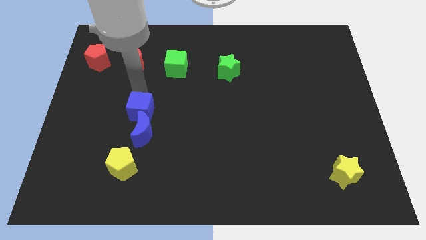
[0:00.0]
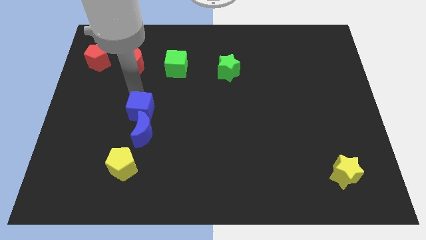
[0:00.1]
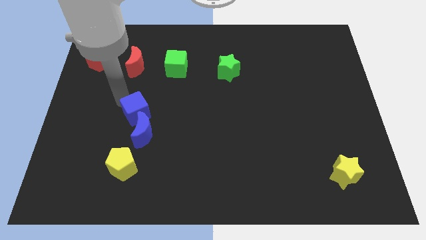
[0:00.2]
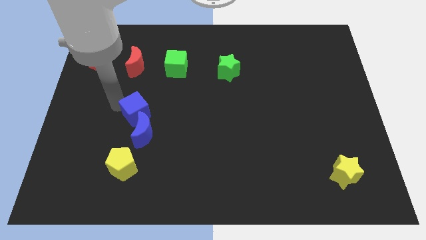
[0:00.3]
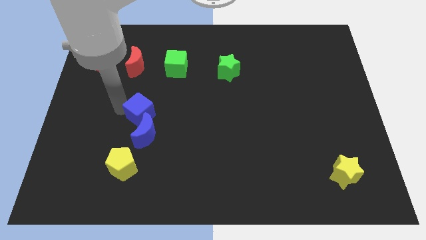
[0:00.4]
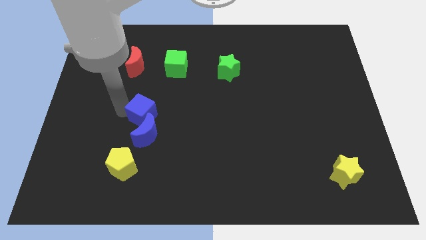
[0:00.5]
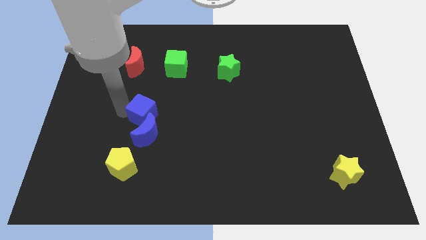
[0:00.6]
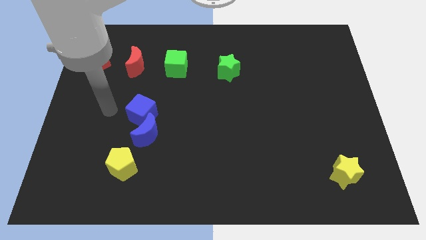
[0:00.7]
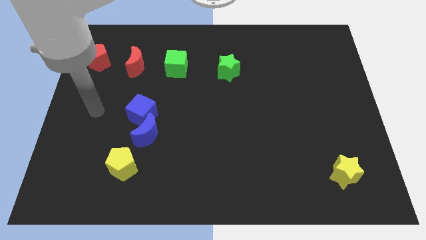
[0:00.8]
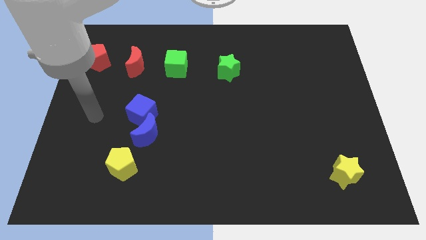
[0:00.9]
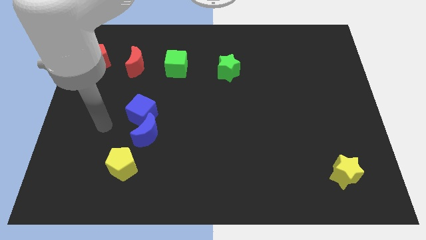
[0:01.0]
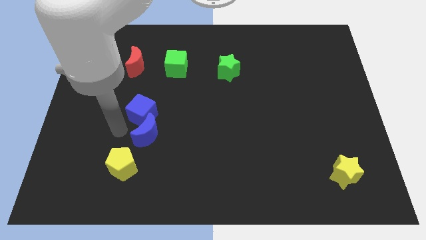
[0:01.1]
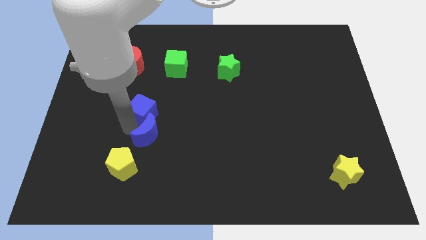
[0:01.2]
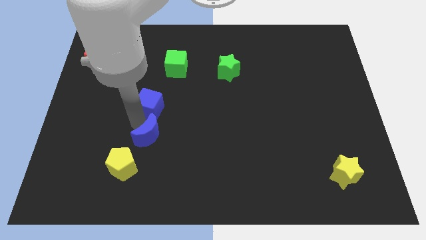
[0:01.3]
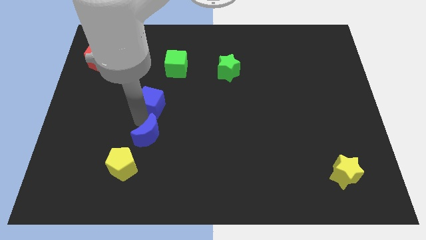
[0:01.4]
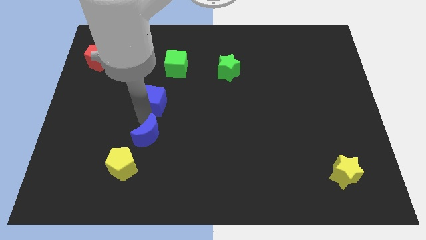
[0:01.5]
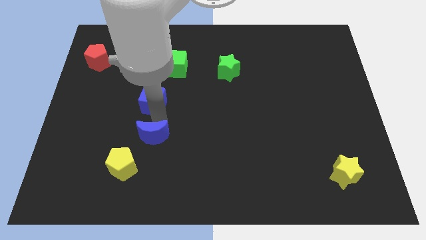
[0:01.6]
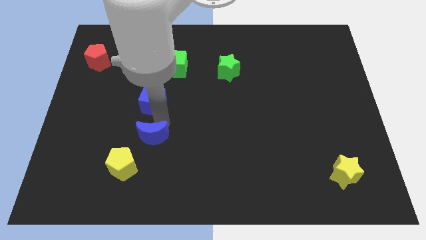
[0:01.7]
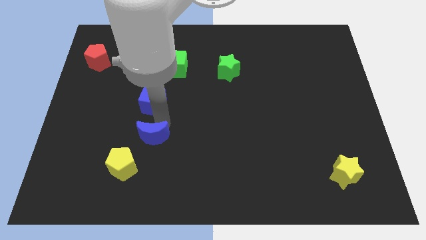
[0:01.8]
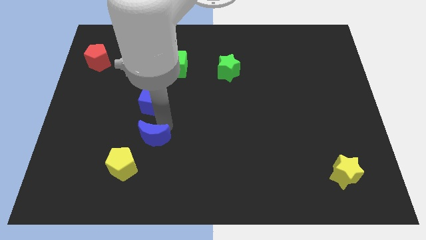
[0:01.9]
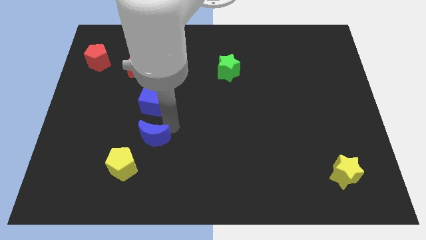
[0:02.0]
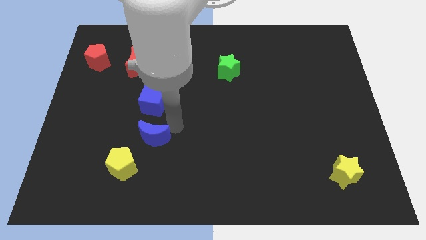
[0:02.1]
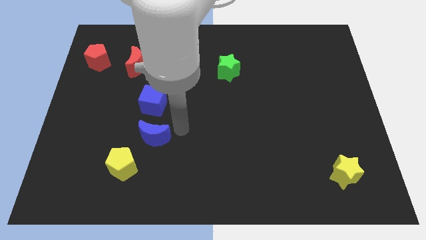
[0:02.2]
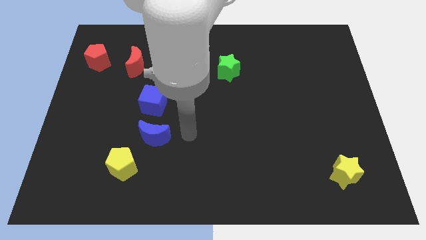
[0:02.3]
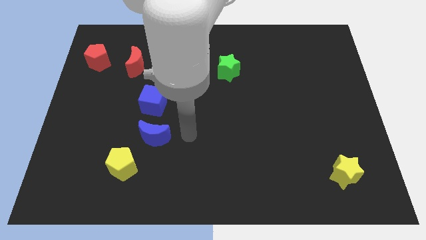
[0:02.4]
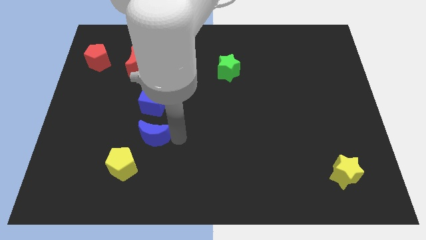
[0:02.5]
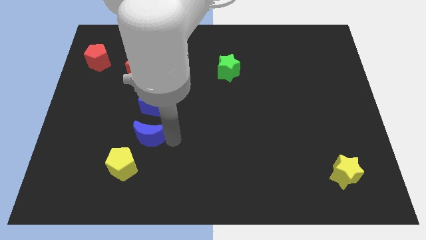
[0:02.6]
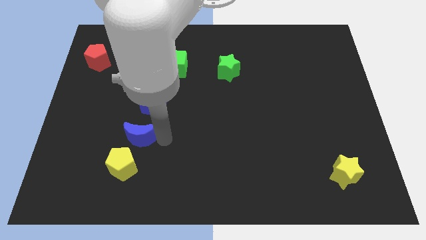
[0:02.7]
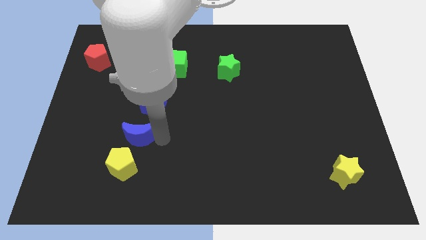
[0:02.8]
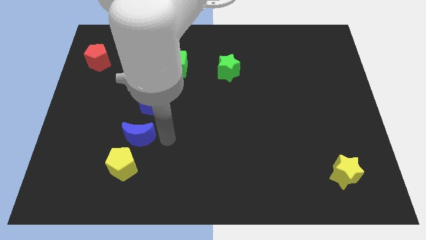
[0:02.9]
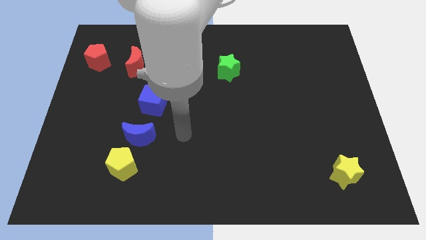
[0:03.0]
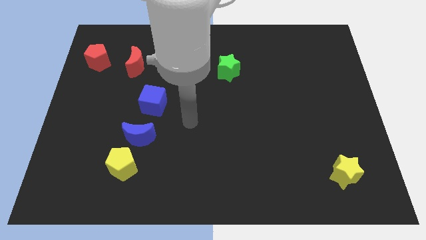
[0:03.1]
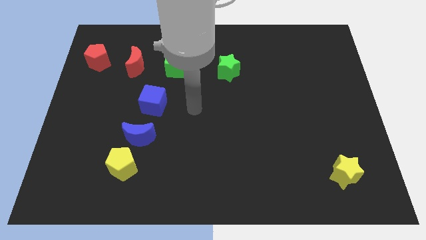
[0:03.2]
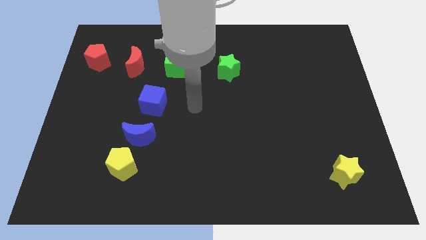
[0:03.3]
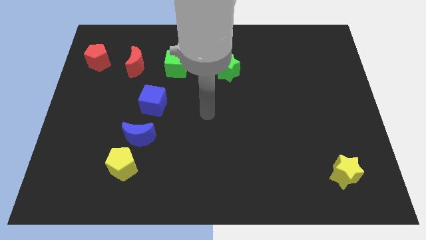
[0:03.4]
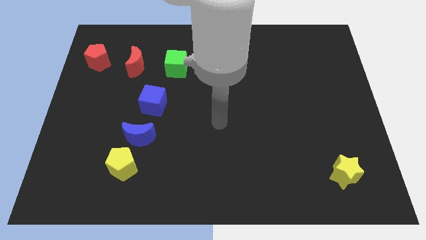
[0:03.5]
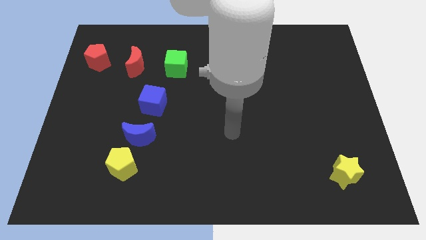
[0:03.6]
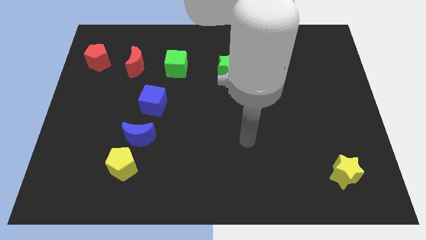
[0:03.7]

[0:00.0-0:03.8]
separate blue moon and blue cube from each other

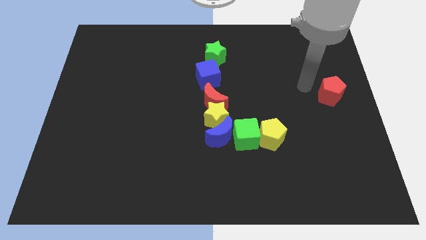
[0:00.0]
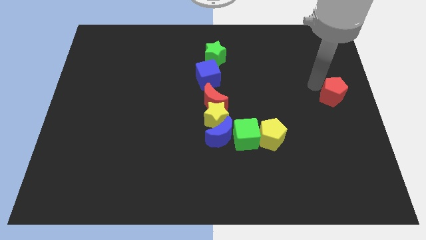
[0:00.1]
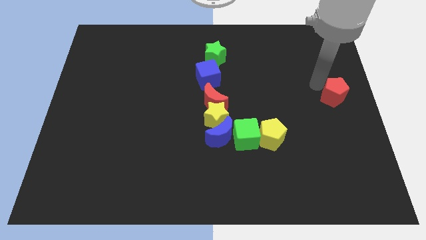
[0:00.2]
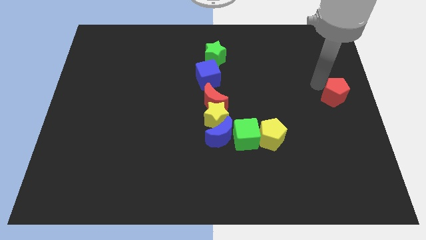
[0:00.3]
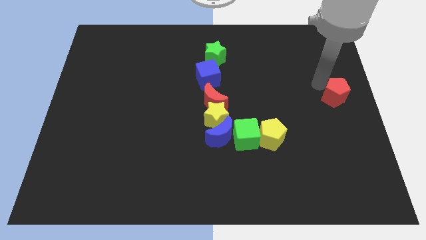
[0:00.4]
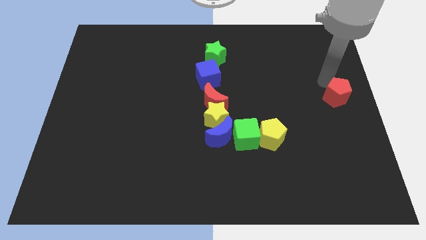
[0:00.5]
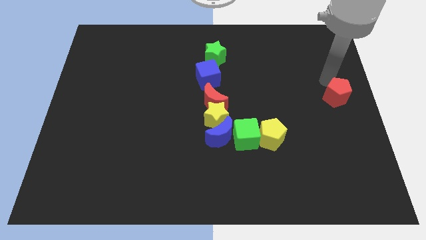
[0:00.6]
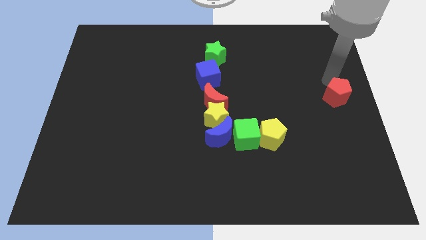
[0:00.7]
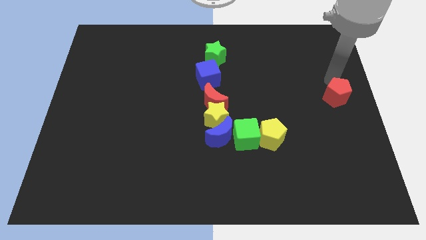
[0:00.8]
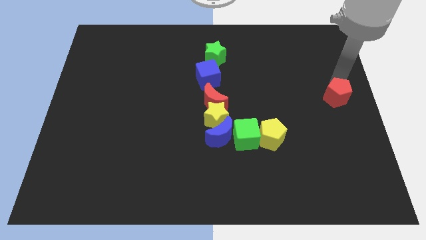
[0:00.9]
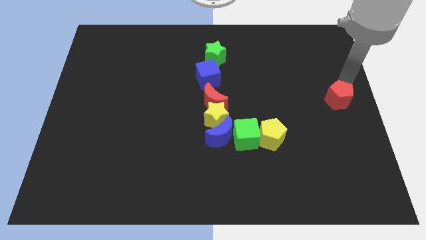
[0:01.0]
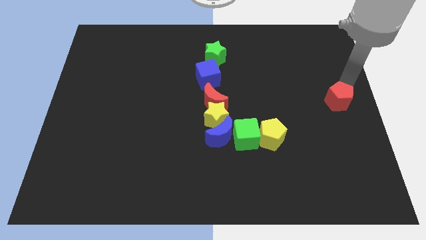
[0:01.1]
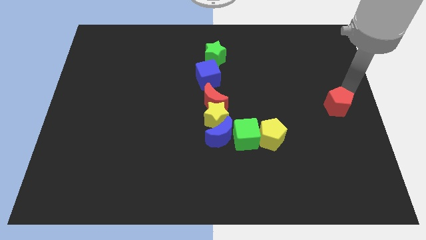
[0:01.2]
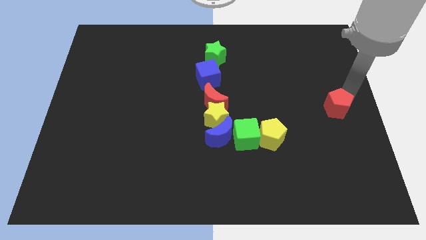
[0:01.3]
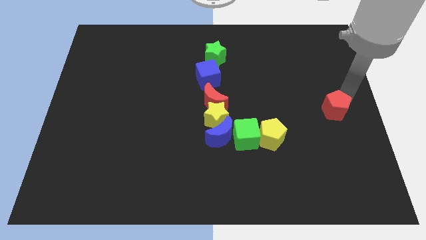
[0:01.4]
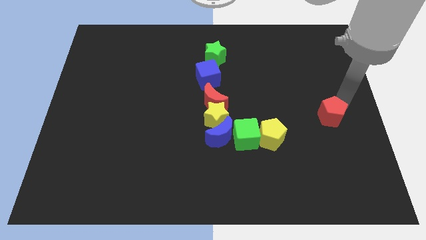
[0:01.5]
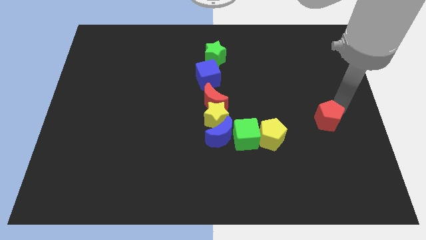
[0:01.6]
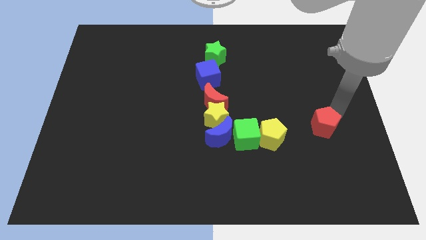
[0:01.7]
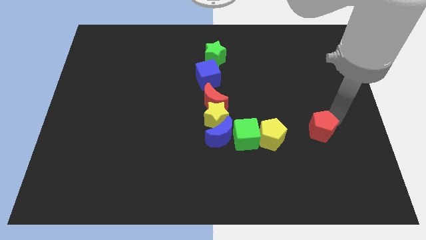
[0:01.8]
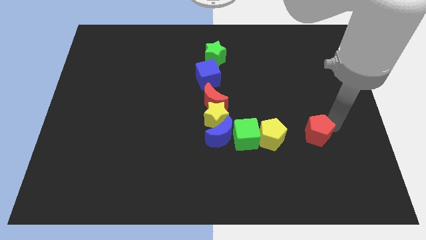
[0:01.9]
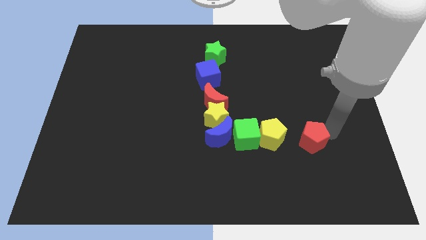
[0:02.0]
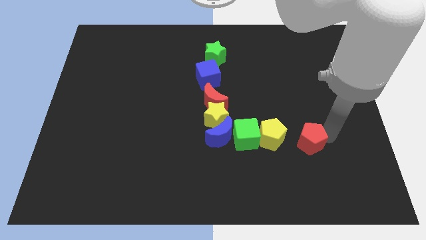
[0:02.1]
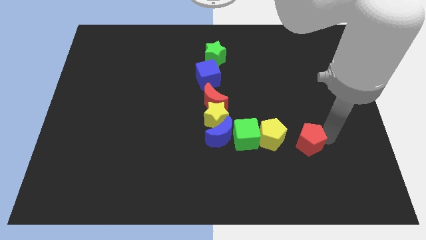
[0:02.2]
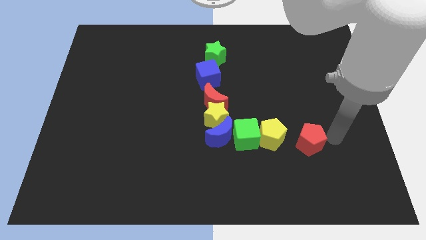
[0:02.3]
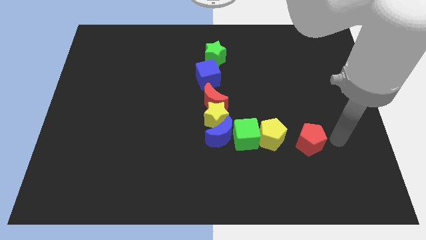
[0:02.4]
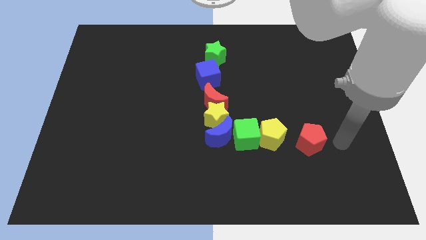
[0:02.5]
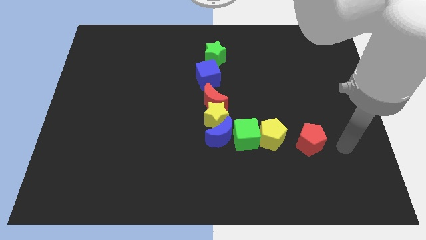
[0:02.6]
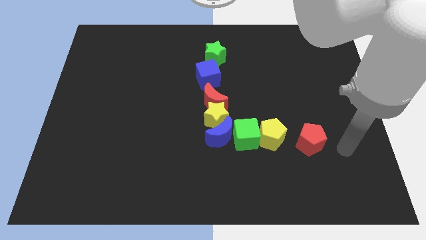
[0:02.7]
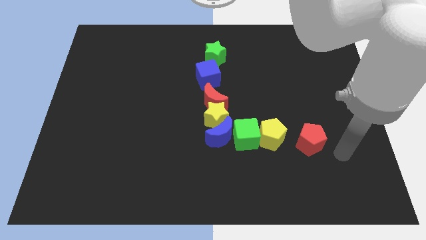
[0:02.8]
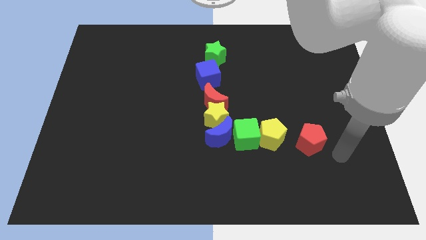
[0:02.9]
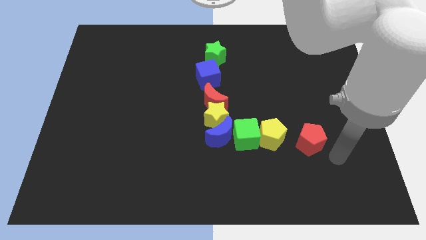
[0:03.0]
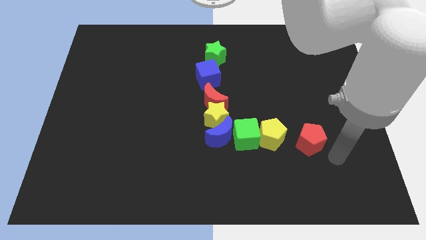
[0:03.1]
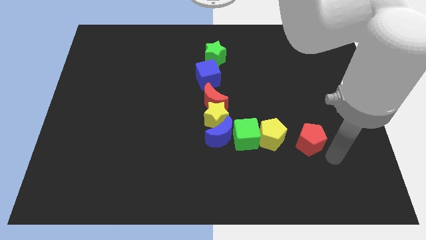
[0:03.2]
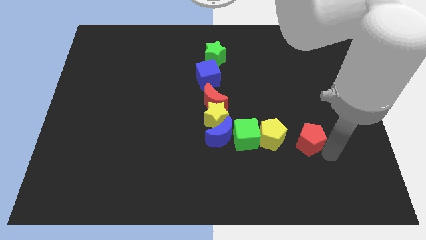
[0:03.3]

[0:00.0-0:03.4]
move the red pentagon towards the yellow pentagon

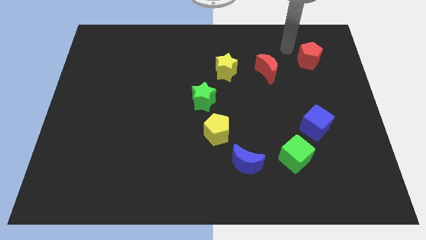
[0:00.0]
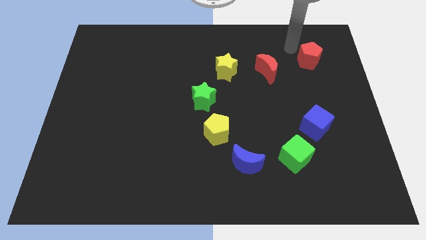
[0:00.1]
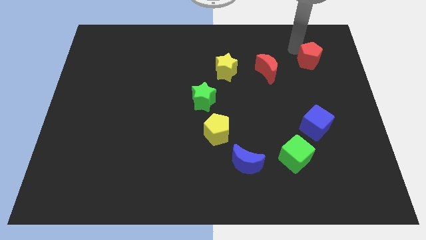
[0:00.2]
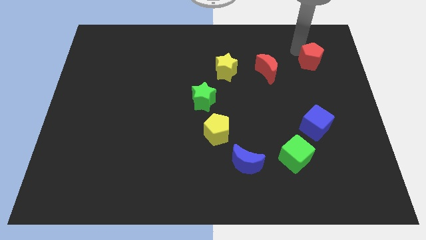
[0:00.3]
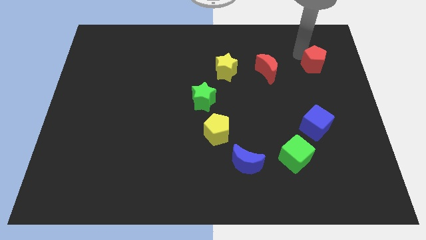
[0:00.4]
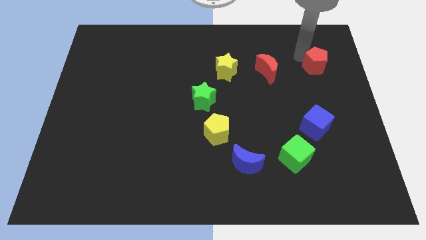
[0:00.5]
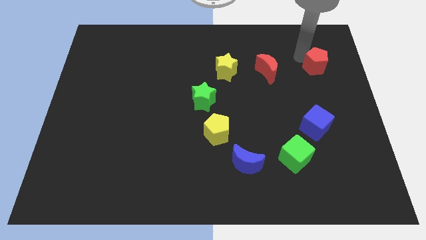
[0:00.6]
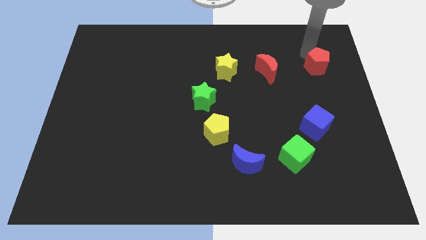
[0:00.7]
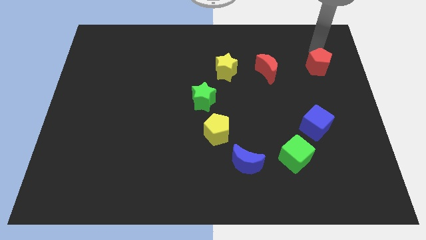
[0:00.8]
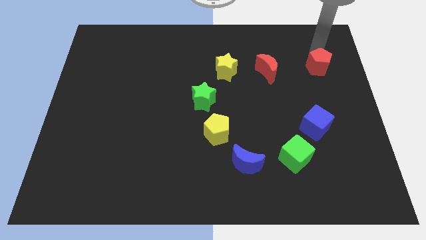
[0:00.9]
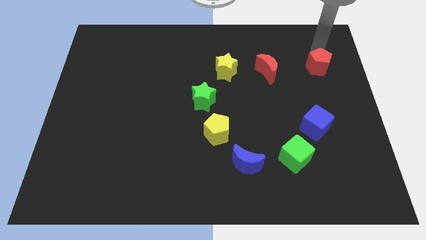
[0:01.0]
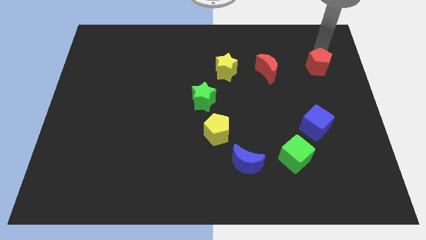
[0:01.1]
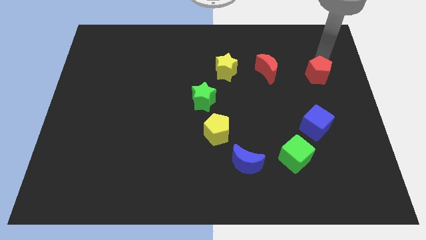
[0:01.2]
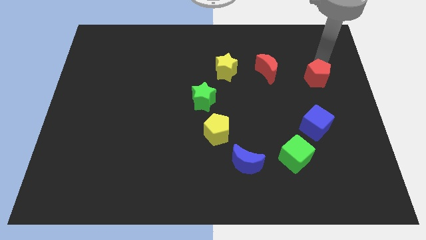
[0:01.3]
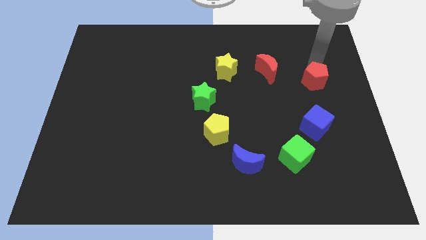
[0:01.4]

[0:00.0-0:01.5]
push the red pentagon downwards slightly towards the bottom of the board

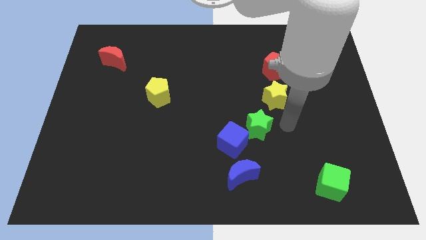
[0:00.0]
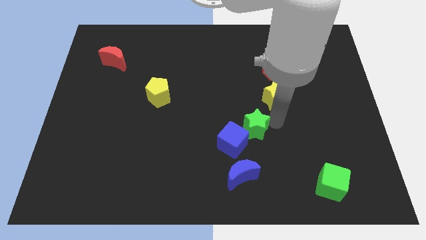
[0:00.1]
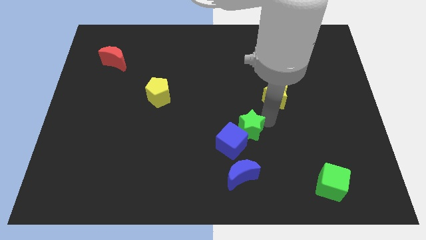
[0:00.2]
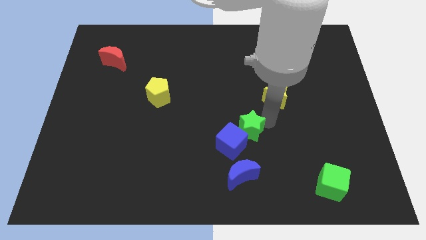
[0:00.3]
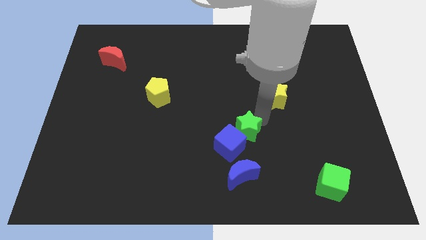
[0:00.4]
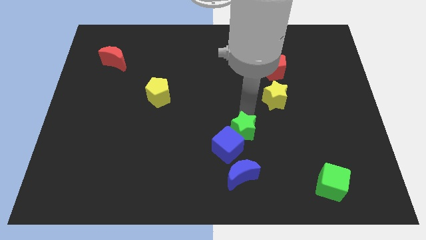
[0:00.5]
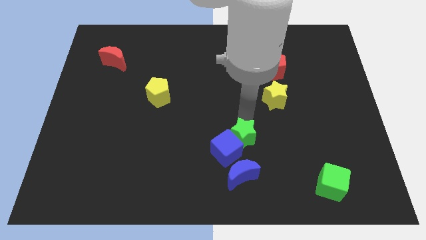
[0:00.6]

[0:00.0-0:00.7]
move the green star to the blue cube
